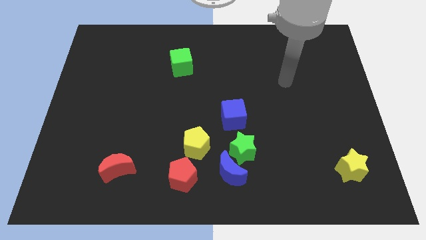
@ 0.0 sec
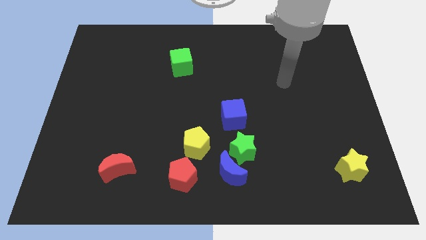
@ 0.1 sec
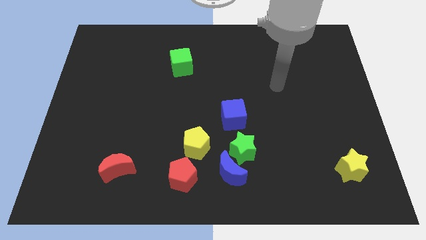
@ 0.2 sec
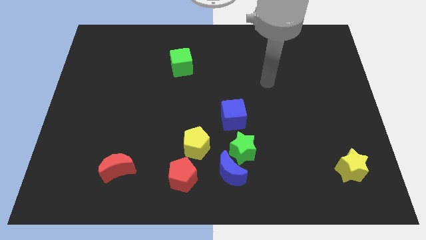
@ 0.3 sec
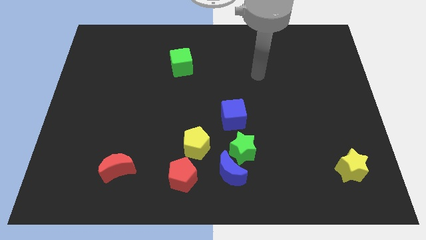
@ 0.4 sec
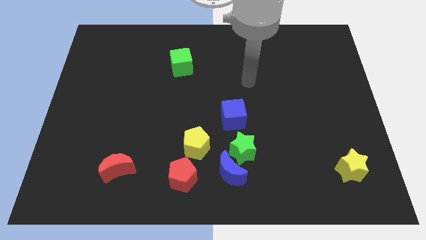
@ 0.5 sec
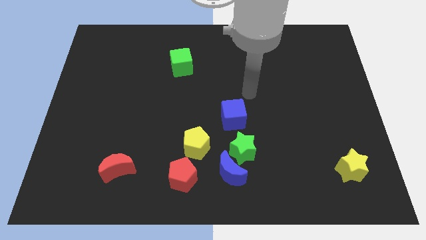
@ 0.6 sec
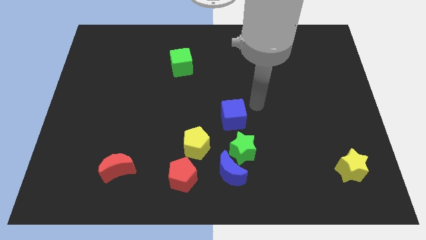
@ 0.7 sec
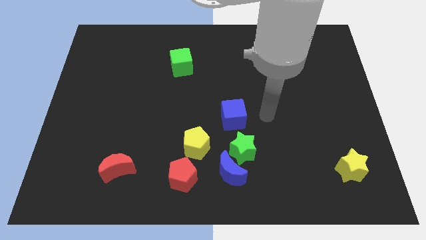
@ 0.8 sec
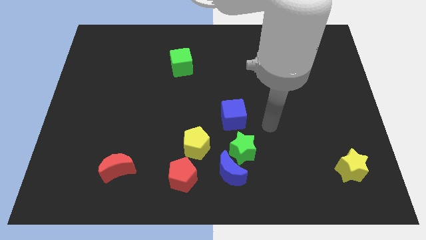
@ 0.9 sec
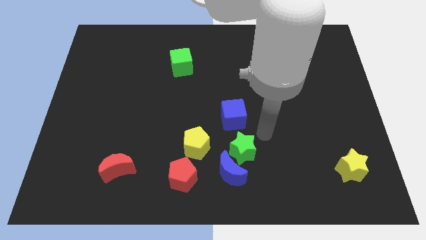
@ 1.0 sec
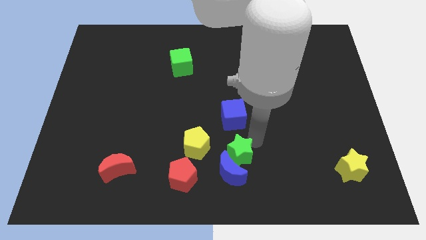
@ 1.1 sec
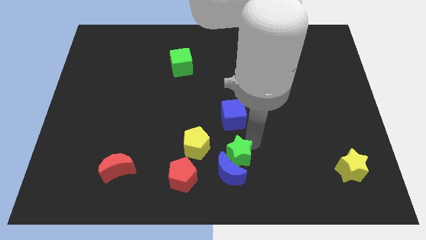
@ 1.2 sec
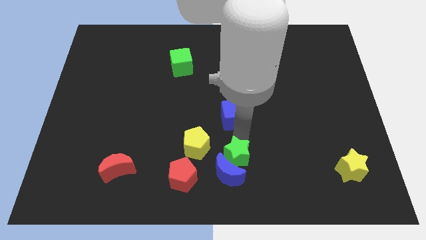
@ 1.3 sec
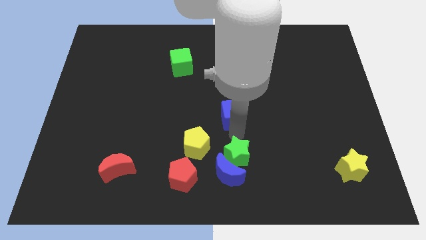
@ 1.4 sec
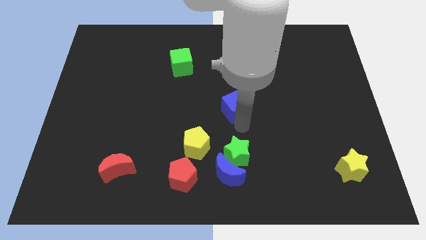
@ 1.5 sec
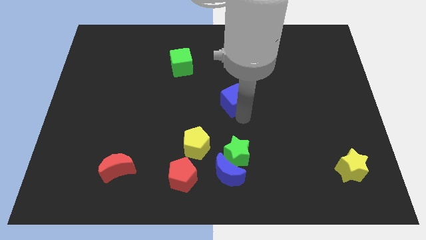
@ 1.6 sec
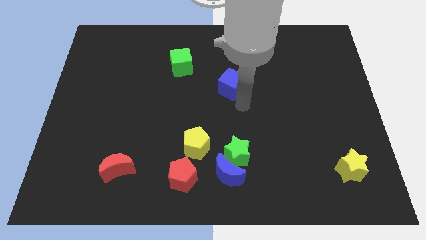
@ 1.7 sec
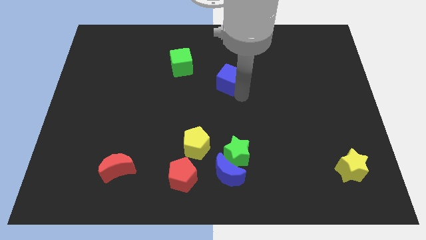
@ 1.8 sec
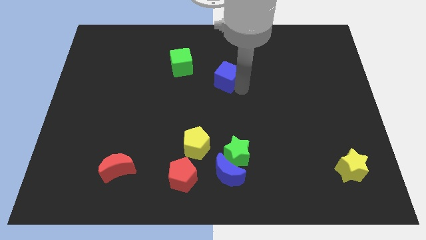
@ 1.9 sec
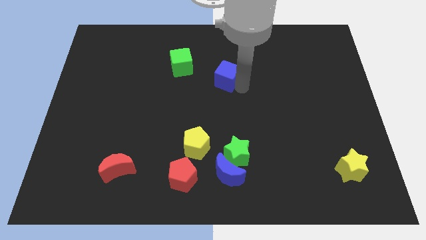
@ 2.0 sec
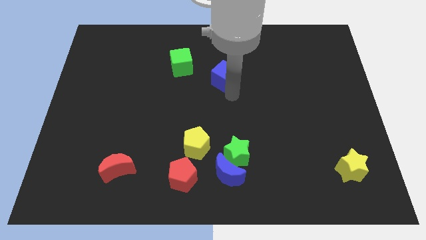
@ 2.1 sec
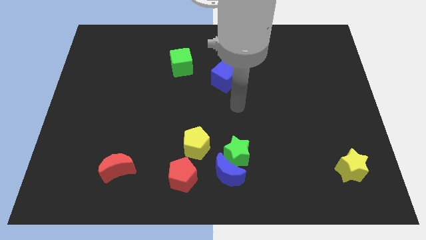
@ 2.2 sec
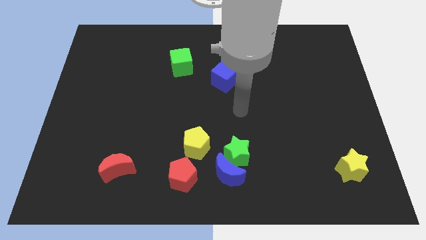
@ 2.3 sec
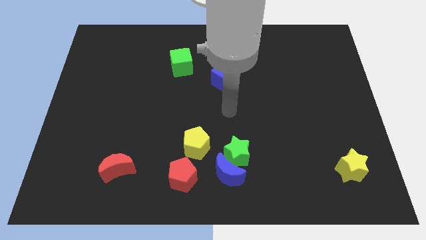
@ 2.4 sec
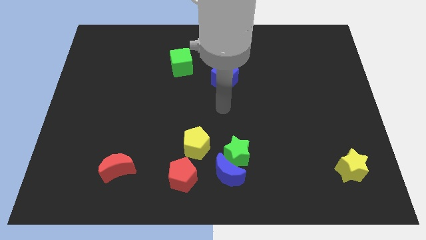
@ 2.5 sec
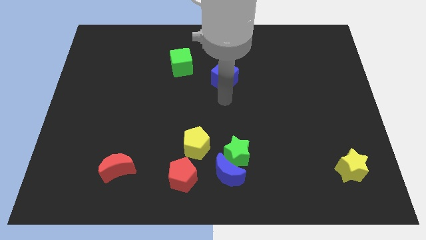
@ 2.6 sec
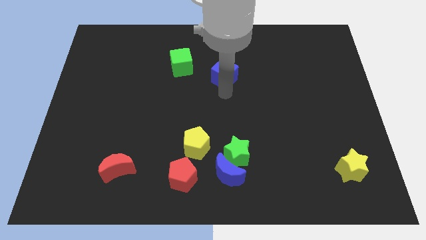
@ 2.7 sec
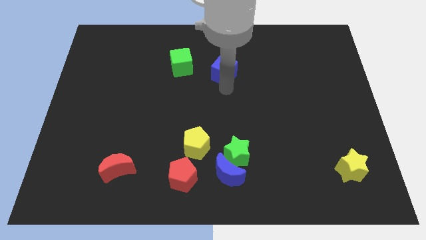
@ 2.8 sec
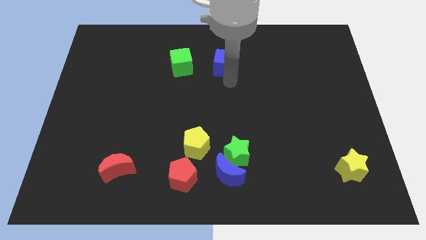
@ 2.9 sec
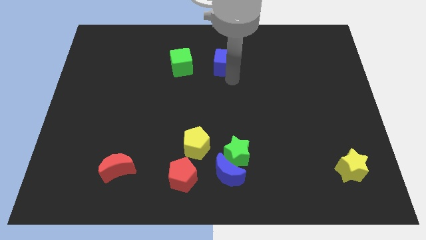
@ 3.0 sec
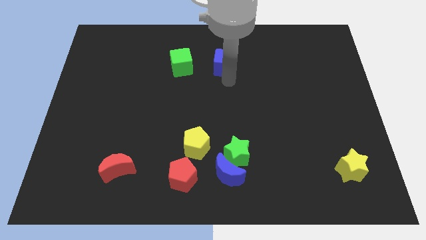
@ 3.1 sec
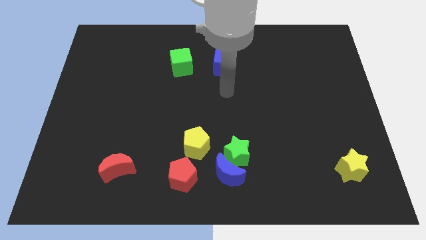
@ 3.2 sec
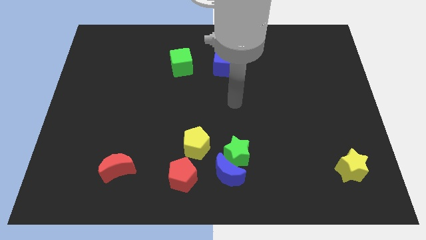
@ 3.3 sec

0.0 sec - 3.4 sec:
put the blue cube parallel right to the green cube

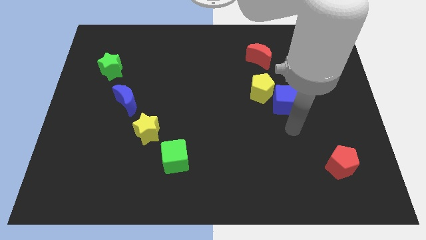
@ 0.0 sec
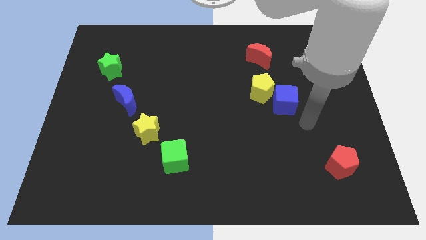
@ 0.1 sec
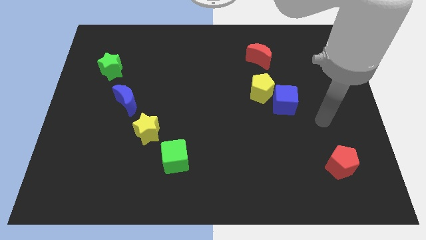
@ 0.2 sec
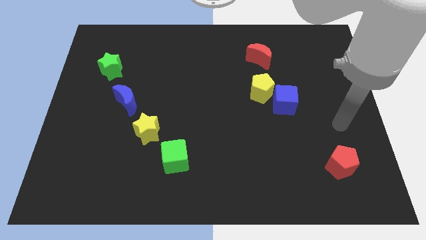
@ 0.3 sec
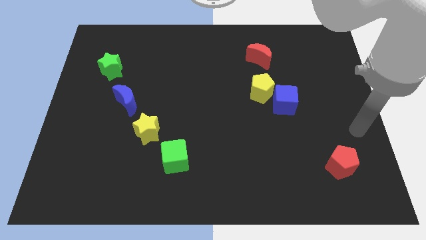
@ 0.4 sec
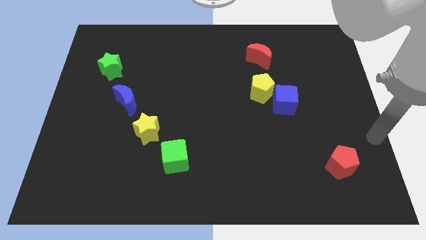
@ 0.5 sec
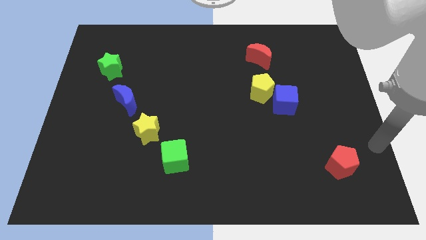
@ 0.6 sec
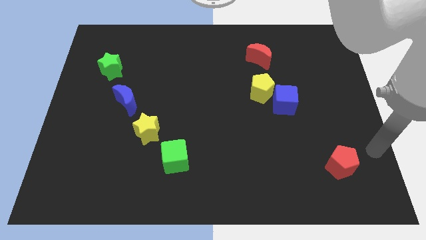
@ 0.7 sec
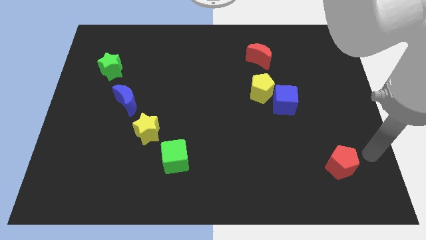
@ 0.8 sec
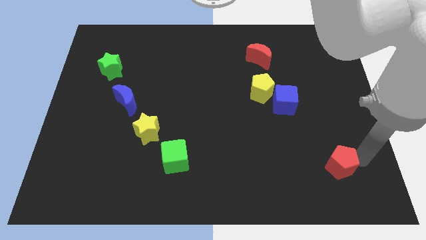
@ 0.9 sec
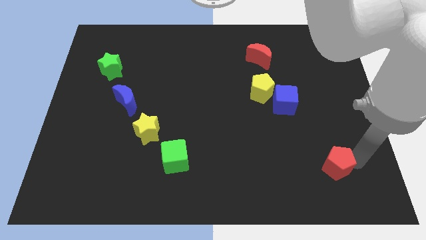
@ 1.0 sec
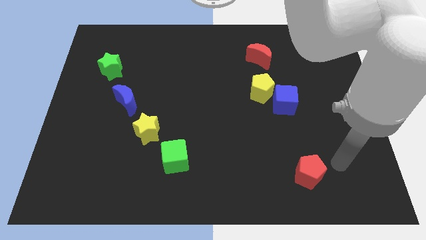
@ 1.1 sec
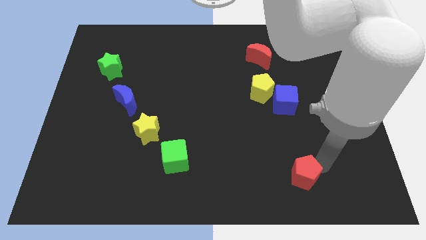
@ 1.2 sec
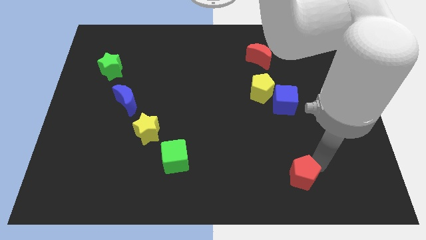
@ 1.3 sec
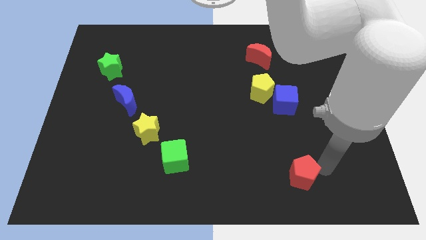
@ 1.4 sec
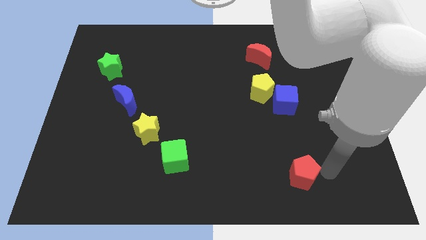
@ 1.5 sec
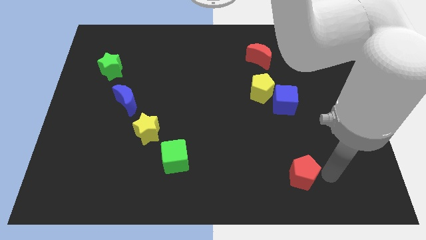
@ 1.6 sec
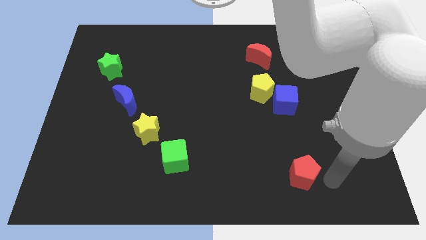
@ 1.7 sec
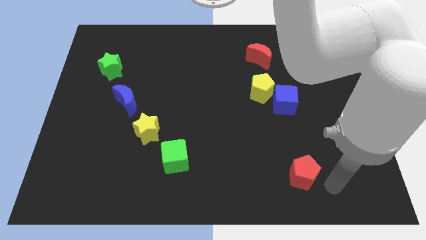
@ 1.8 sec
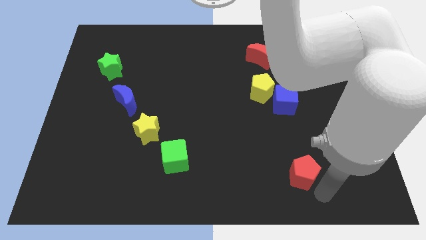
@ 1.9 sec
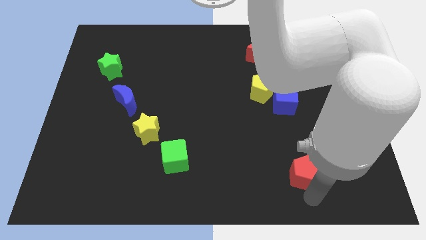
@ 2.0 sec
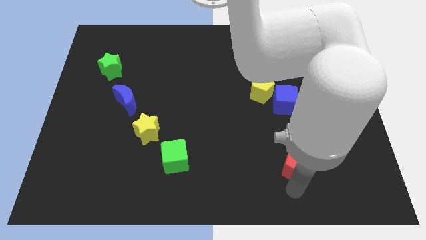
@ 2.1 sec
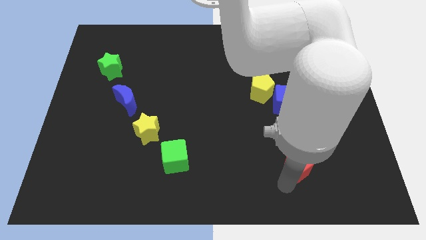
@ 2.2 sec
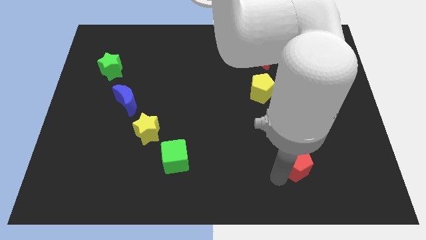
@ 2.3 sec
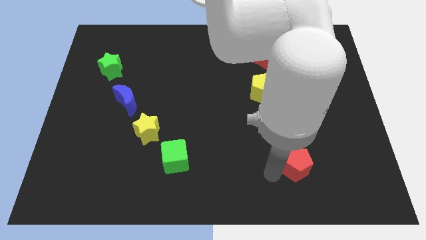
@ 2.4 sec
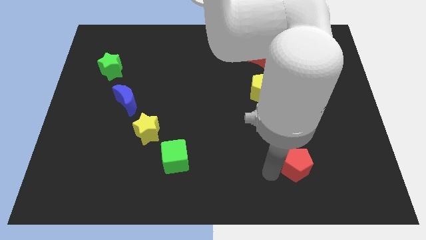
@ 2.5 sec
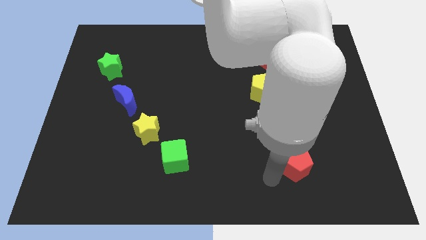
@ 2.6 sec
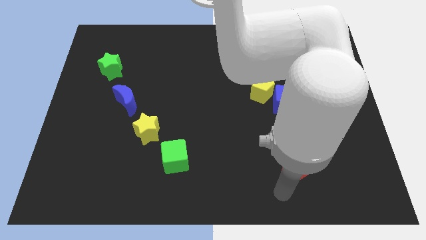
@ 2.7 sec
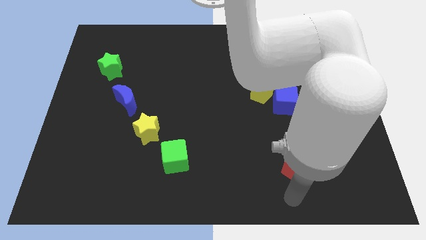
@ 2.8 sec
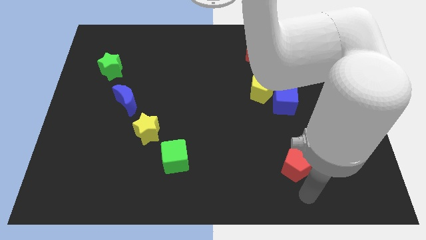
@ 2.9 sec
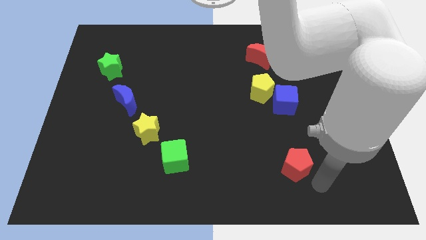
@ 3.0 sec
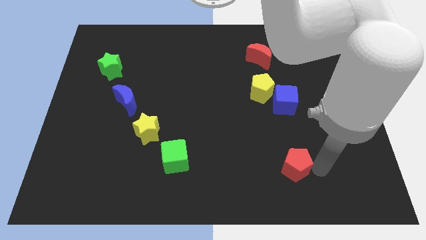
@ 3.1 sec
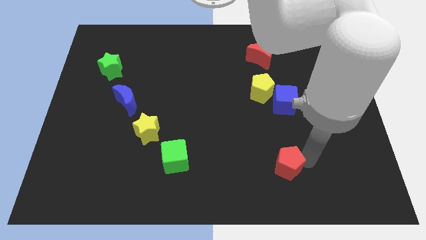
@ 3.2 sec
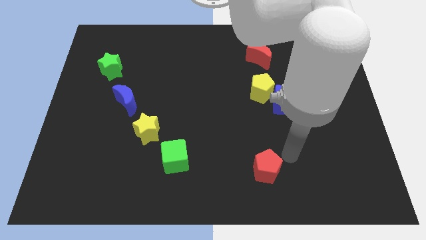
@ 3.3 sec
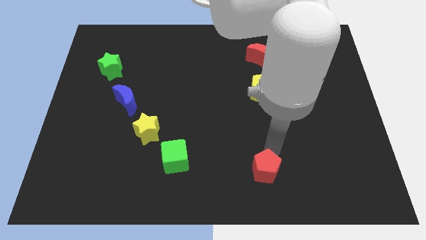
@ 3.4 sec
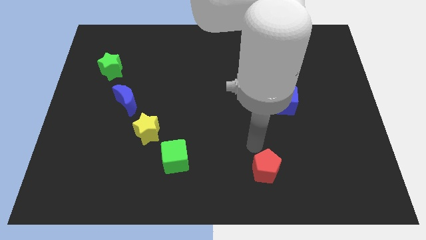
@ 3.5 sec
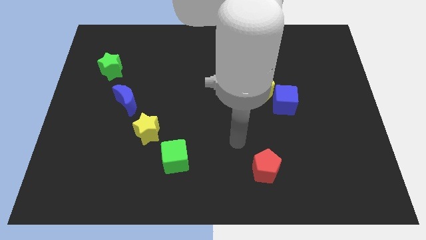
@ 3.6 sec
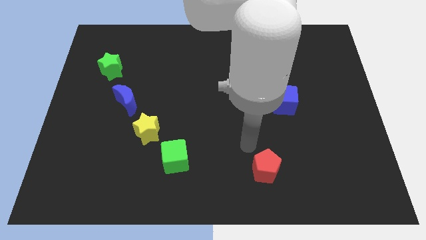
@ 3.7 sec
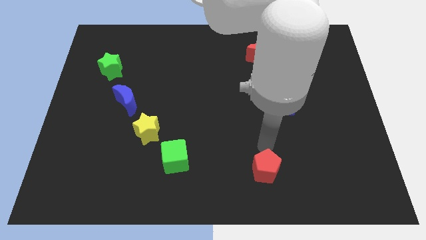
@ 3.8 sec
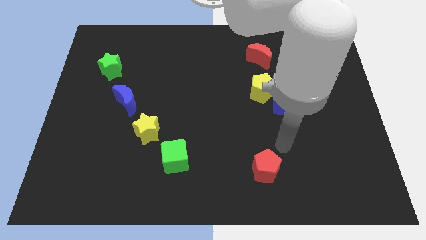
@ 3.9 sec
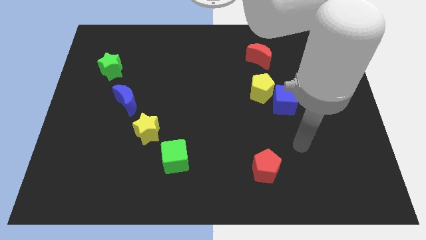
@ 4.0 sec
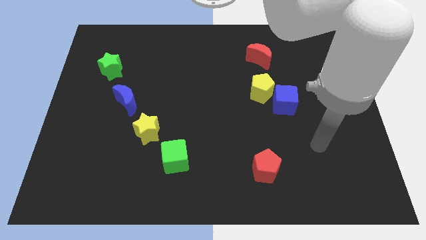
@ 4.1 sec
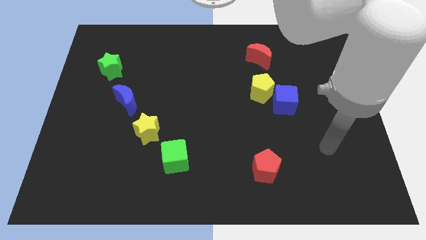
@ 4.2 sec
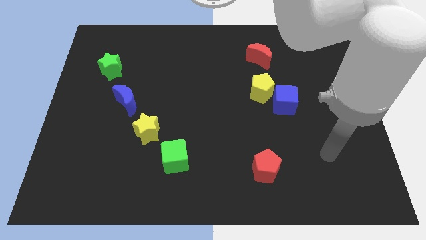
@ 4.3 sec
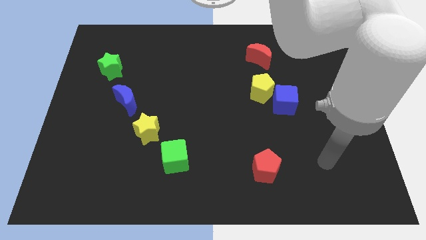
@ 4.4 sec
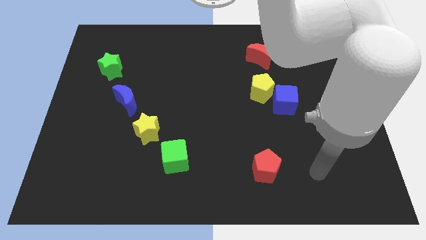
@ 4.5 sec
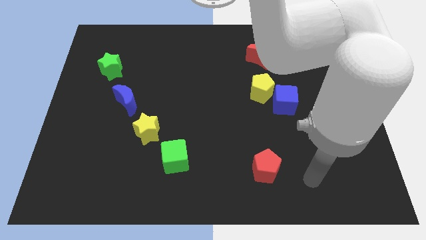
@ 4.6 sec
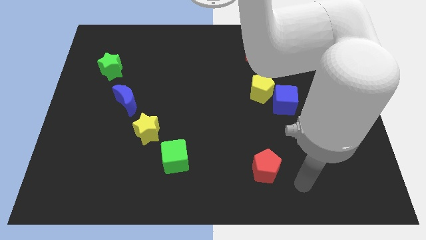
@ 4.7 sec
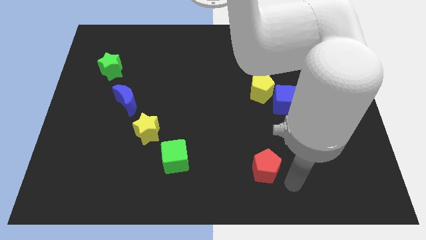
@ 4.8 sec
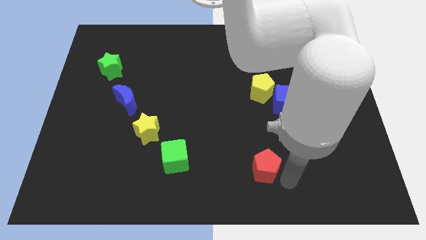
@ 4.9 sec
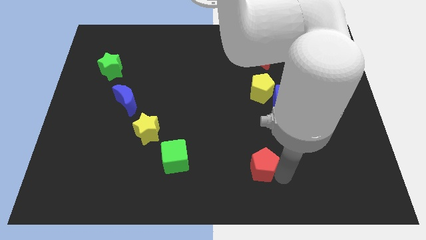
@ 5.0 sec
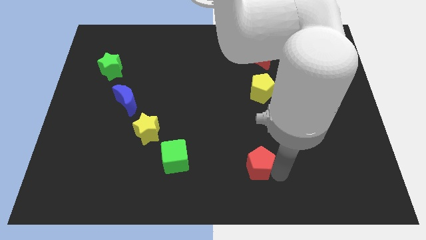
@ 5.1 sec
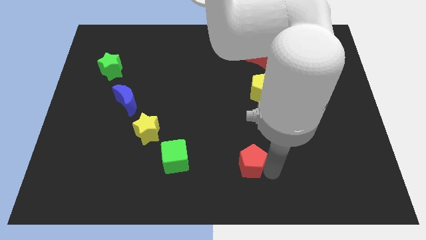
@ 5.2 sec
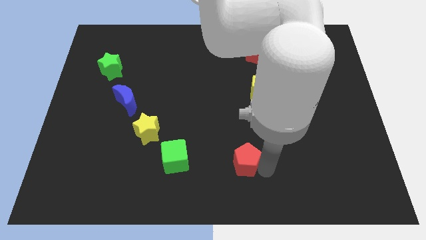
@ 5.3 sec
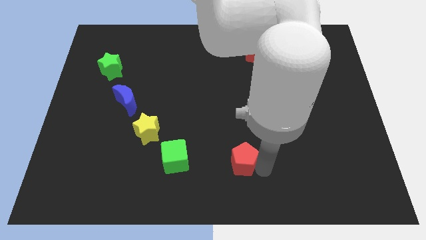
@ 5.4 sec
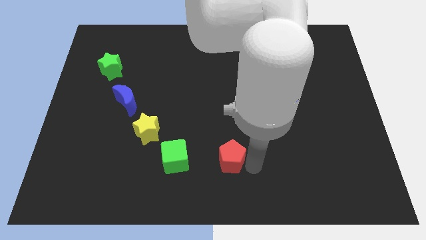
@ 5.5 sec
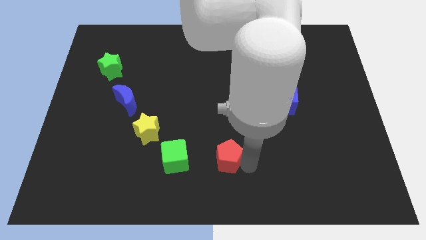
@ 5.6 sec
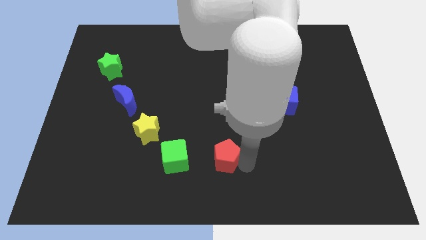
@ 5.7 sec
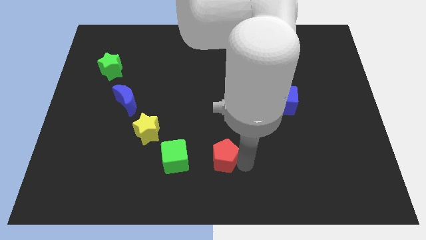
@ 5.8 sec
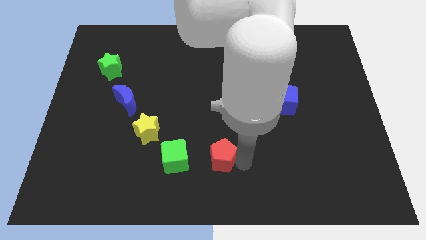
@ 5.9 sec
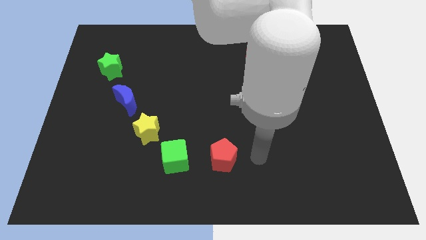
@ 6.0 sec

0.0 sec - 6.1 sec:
move the red pentagon to the right side of green cube
